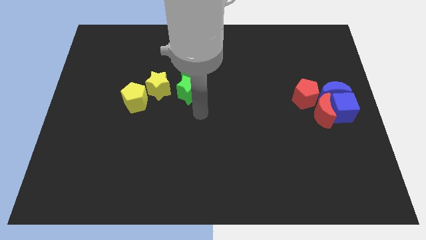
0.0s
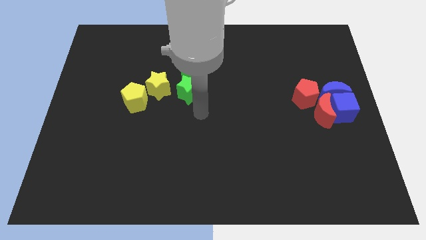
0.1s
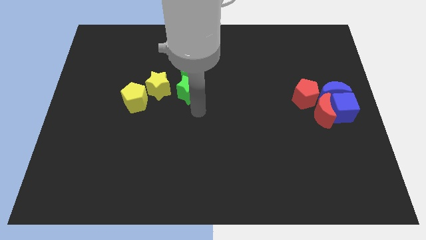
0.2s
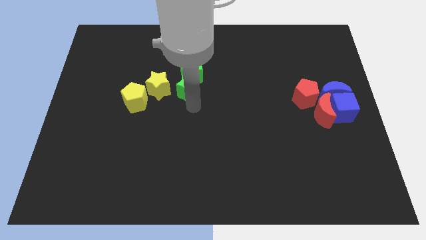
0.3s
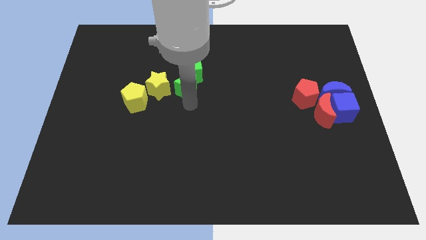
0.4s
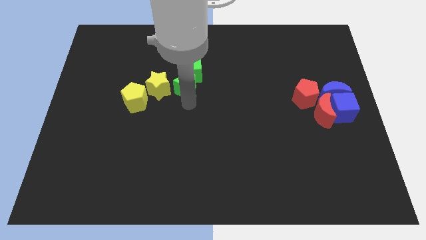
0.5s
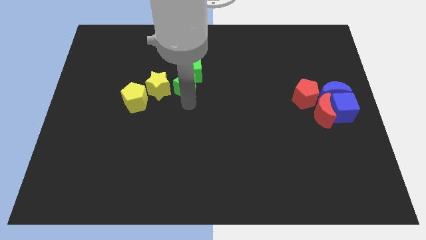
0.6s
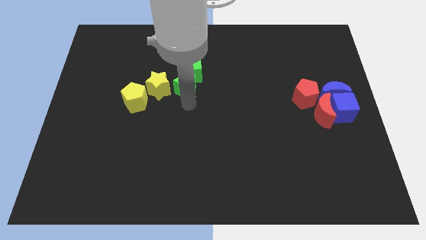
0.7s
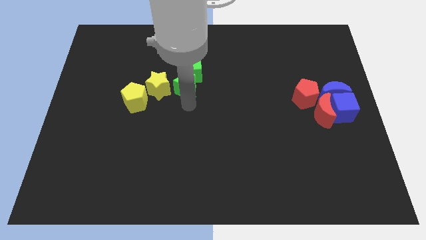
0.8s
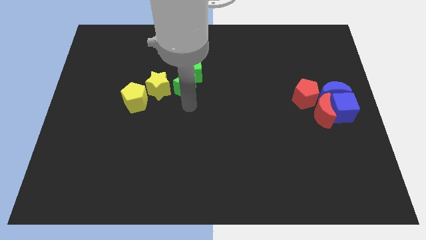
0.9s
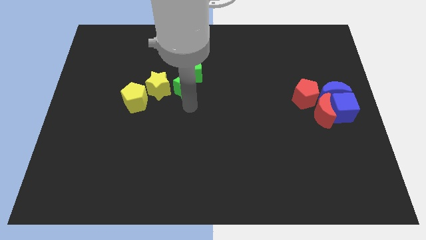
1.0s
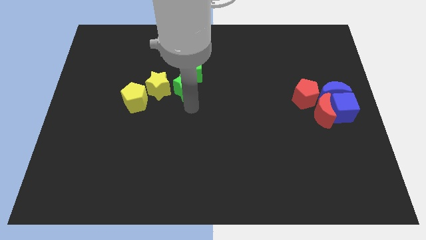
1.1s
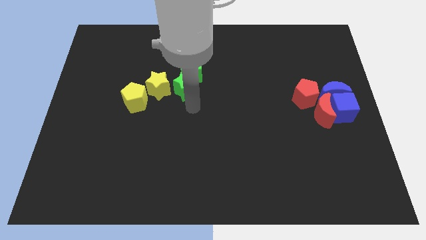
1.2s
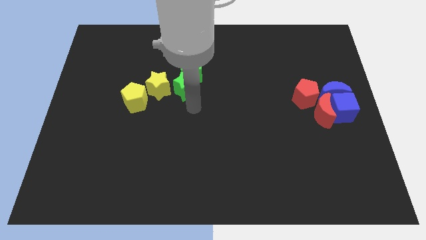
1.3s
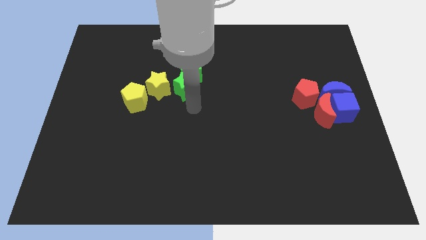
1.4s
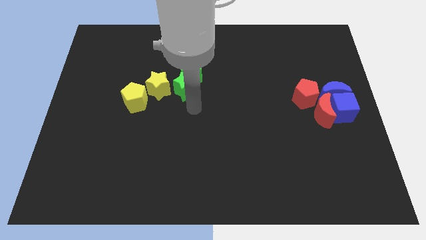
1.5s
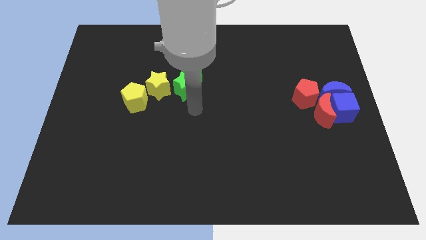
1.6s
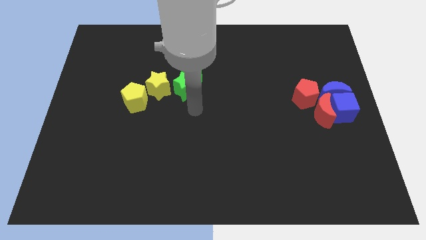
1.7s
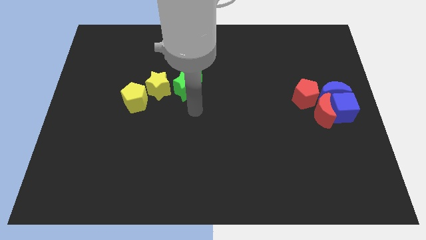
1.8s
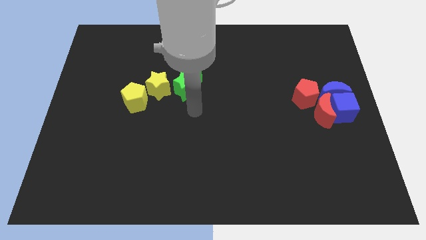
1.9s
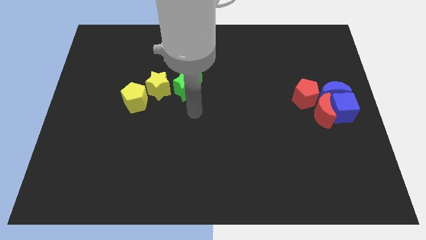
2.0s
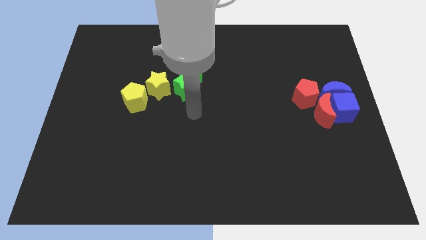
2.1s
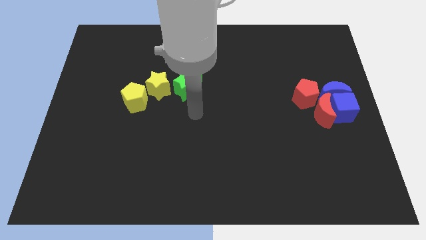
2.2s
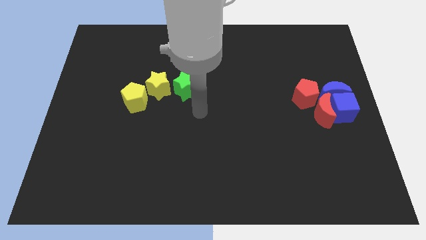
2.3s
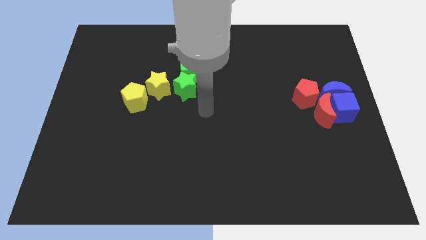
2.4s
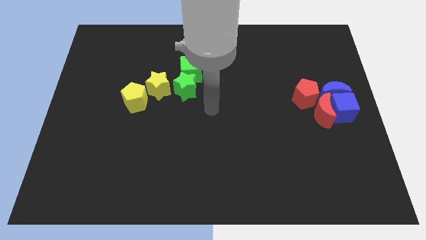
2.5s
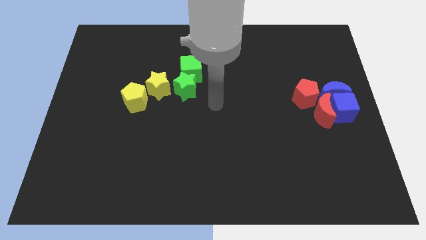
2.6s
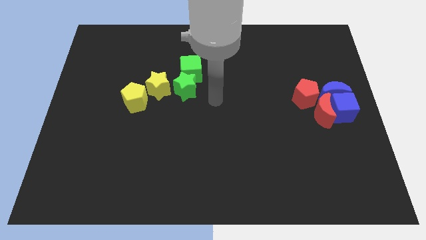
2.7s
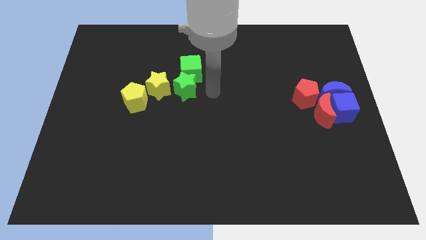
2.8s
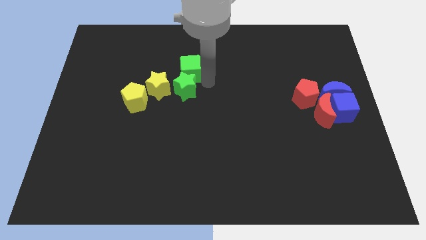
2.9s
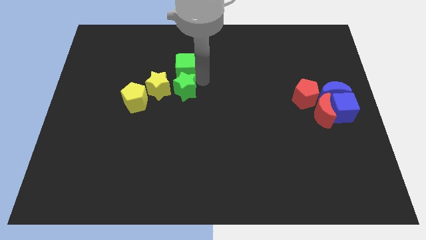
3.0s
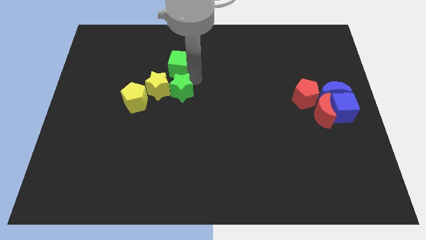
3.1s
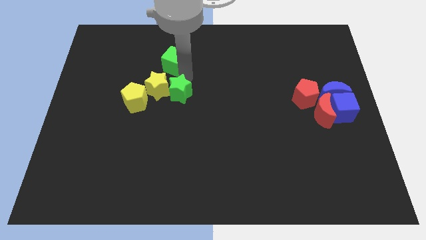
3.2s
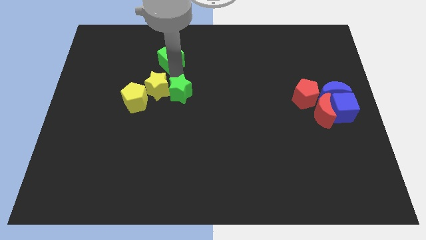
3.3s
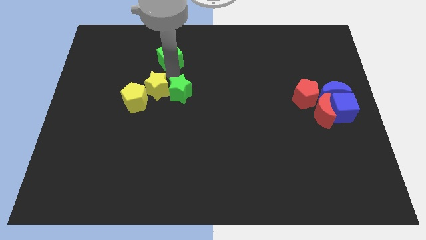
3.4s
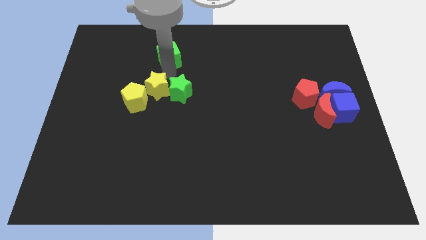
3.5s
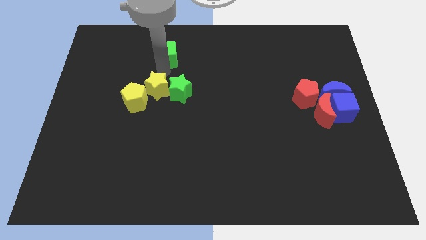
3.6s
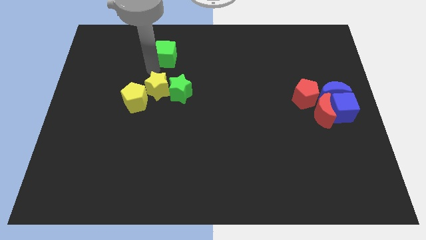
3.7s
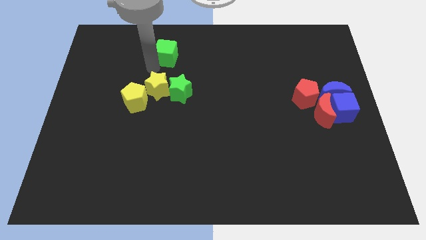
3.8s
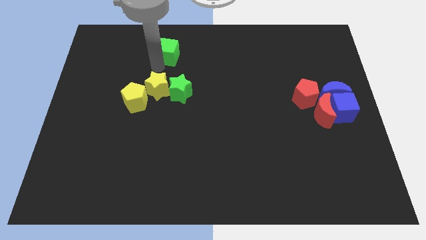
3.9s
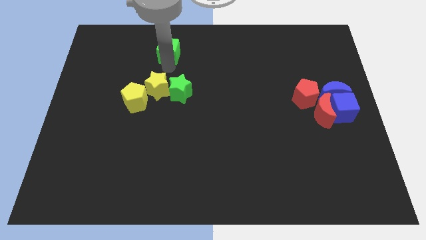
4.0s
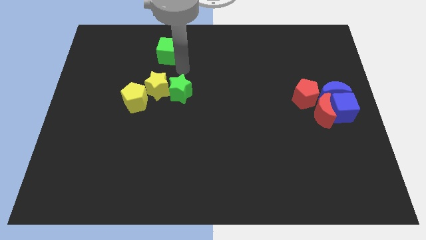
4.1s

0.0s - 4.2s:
move the green cube above to the yellow star

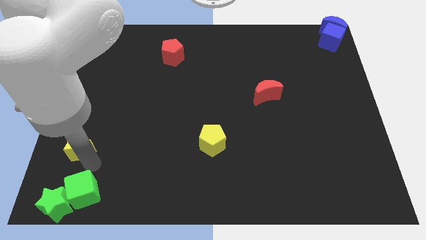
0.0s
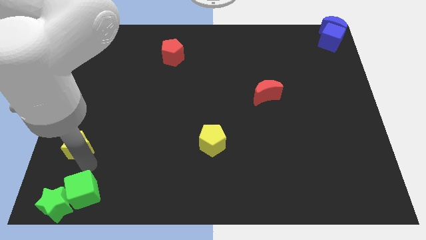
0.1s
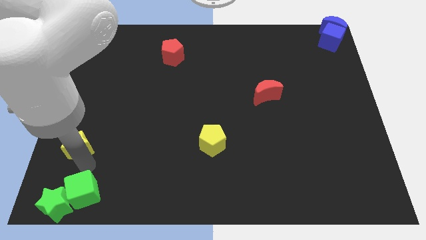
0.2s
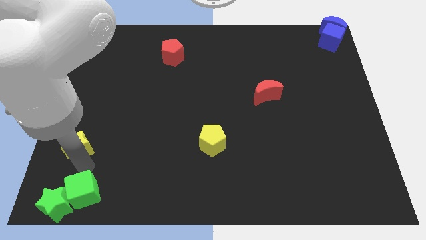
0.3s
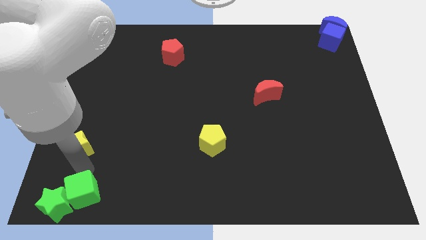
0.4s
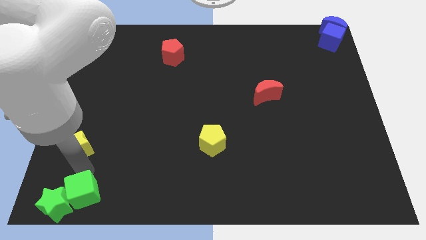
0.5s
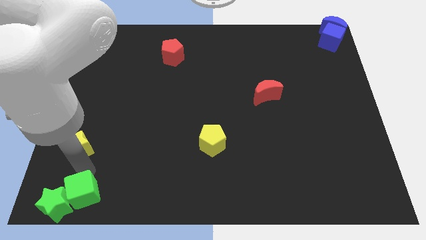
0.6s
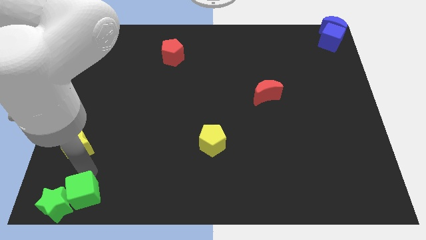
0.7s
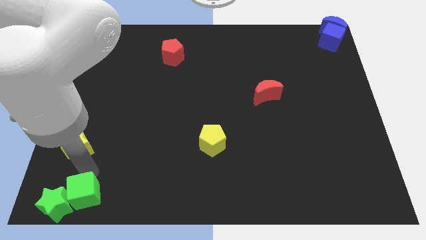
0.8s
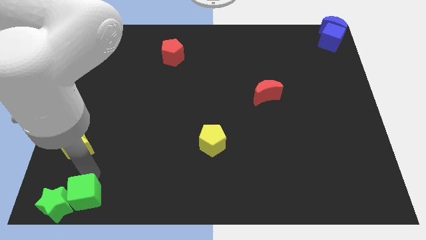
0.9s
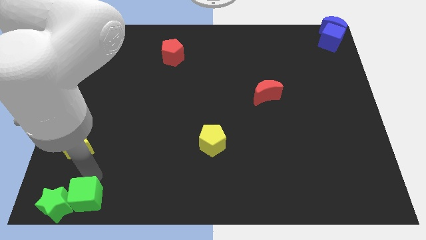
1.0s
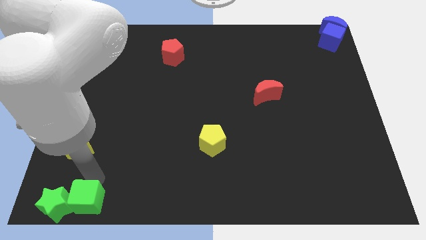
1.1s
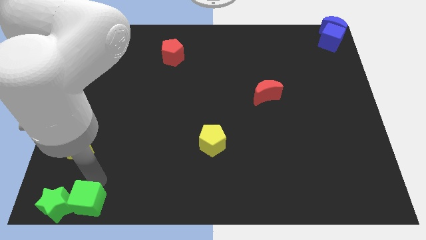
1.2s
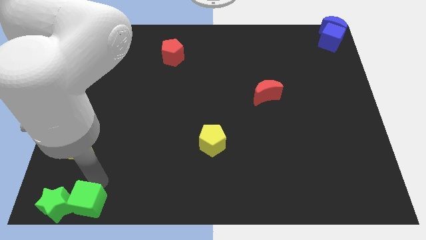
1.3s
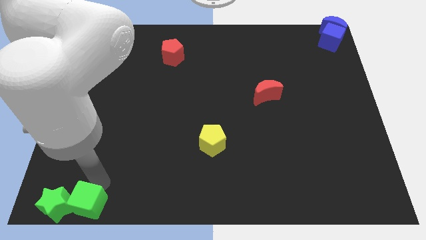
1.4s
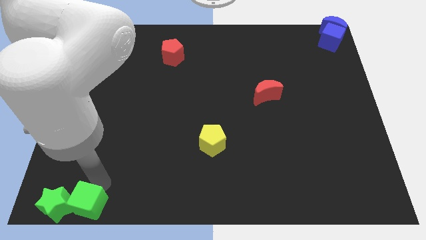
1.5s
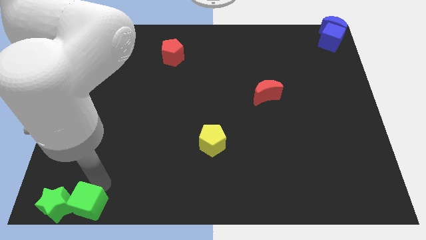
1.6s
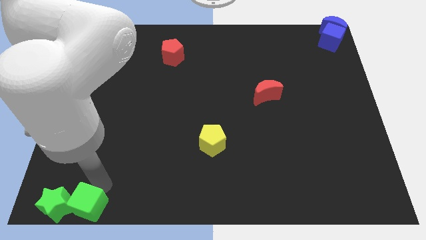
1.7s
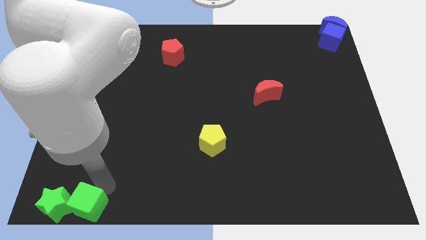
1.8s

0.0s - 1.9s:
push the green cube slightly to the right of the green star

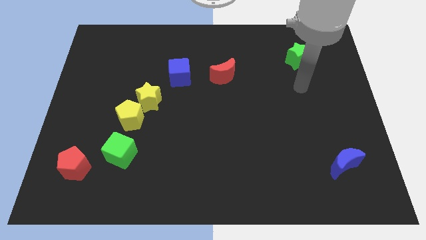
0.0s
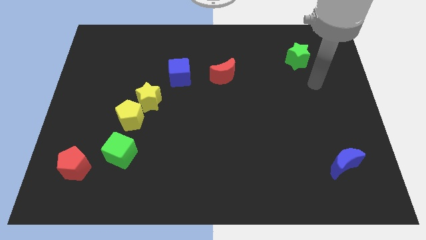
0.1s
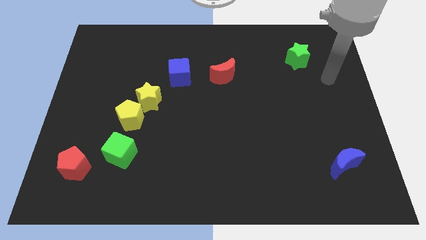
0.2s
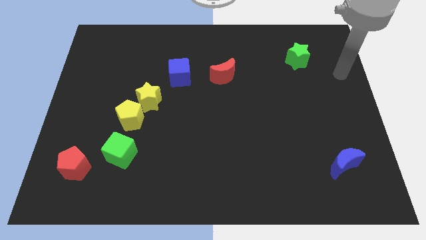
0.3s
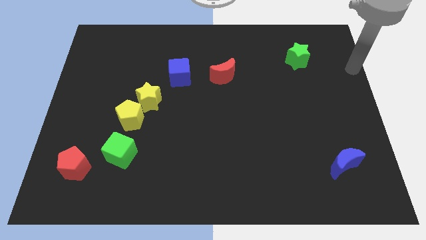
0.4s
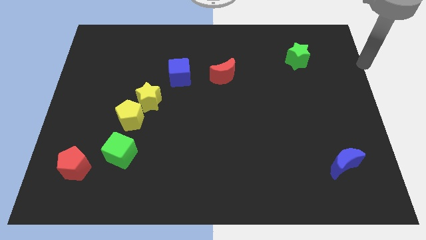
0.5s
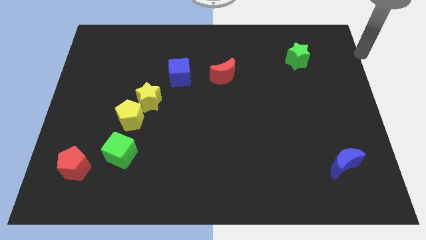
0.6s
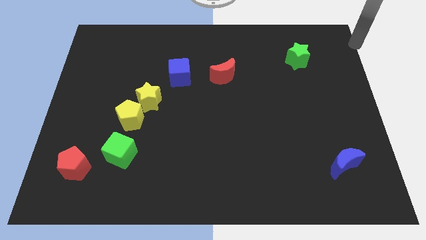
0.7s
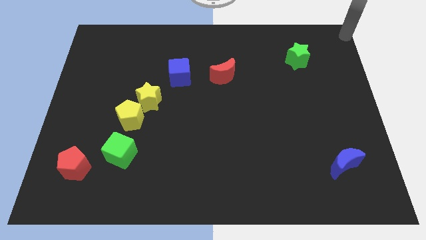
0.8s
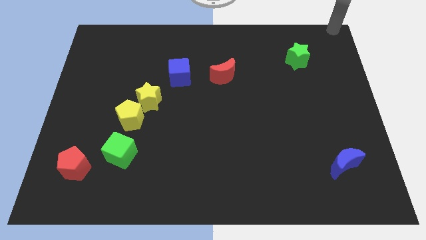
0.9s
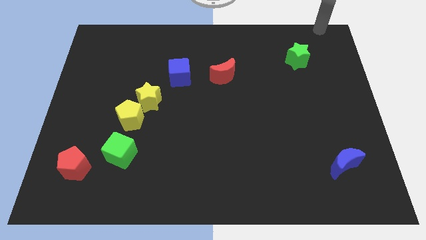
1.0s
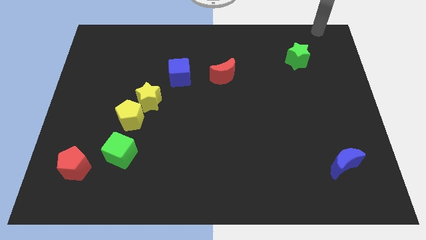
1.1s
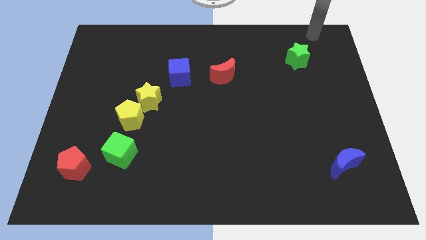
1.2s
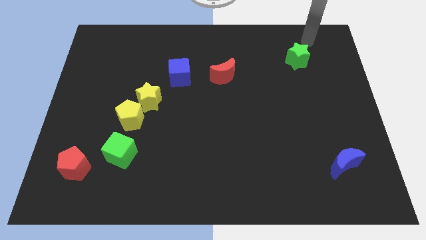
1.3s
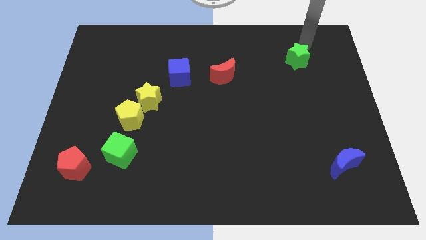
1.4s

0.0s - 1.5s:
place your arm at the top right side of green star

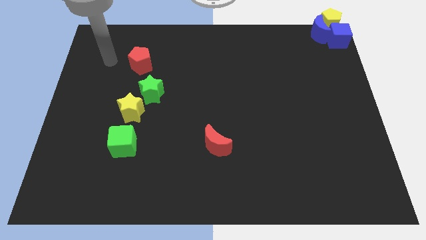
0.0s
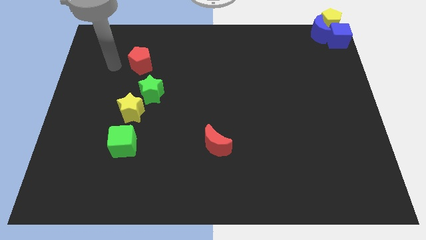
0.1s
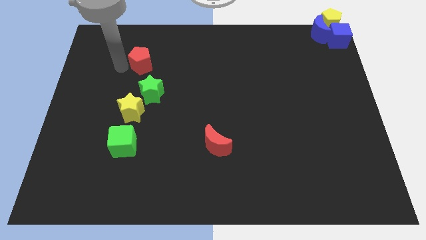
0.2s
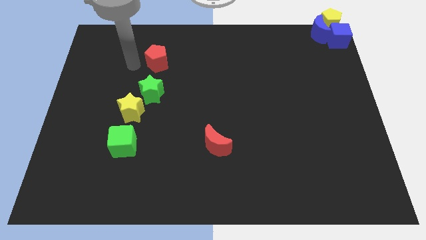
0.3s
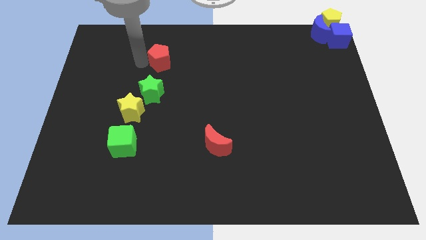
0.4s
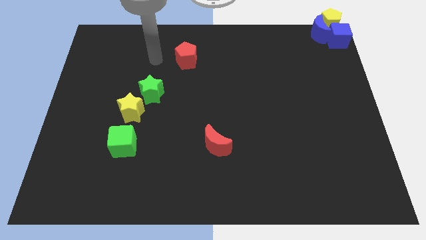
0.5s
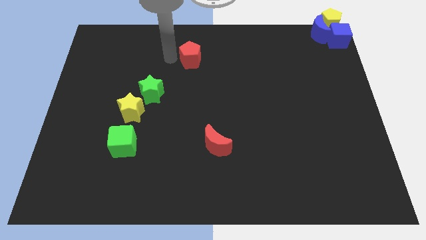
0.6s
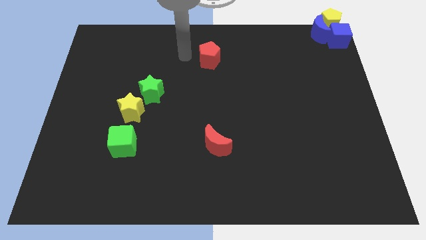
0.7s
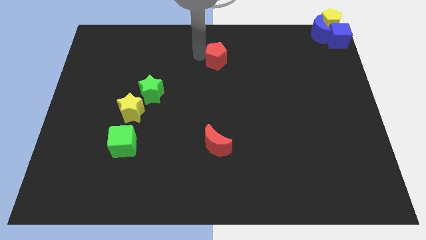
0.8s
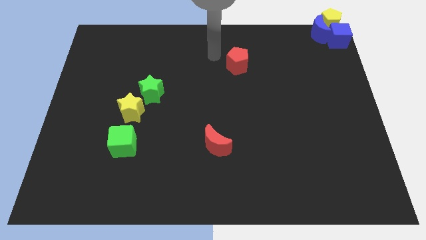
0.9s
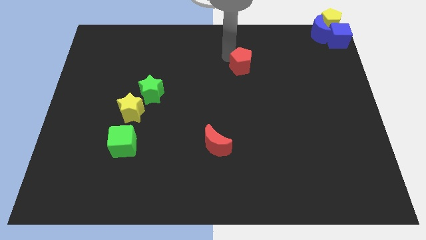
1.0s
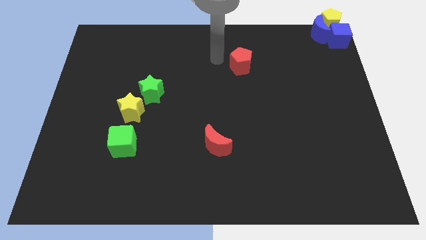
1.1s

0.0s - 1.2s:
move the yellow pentagon to the top right of the board
